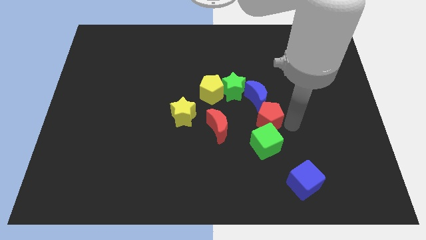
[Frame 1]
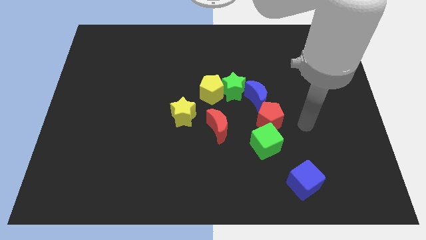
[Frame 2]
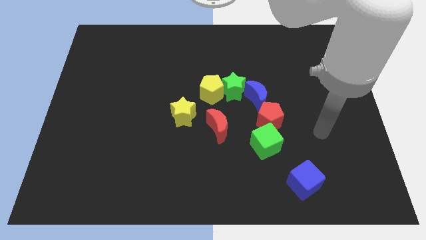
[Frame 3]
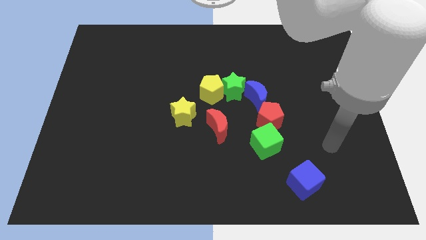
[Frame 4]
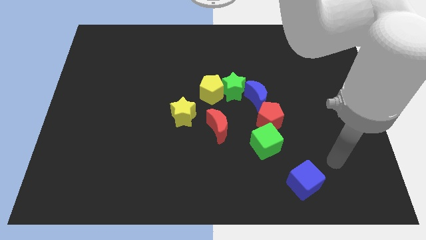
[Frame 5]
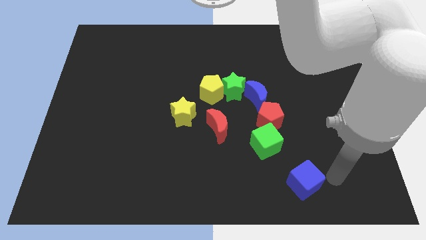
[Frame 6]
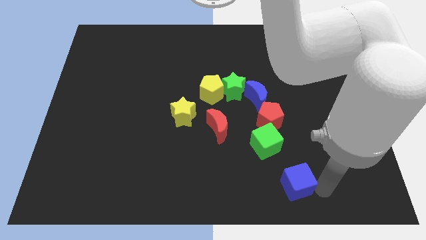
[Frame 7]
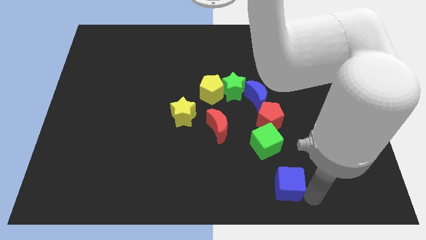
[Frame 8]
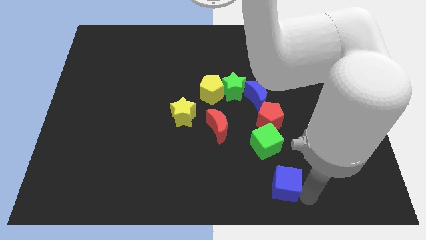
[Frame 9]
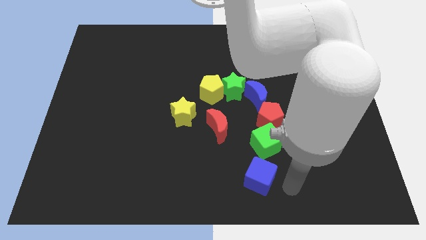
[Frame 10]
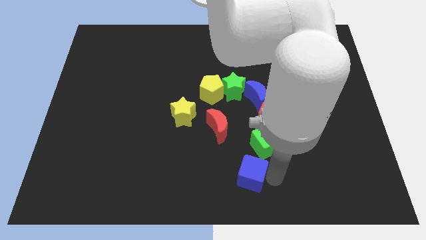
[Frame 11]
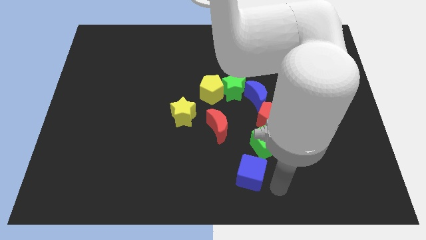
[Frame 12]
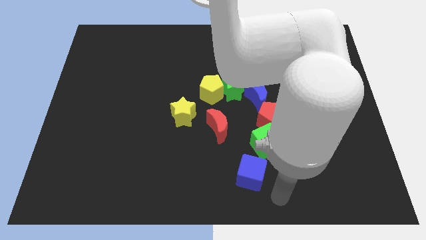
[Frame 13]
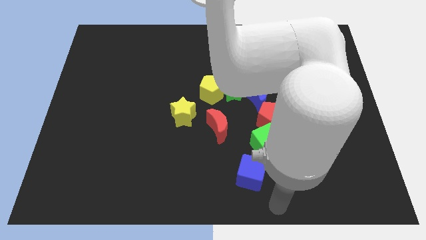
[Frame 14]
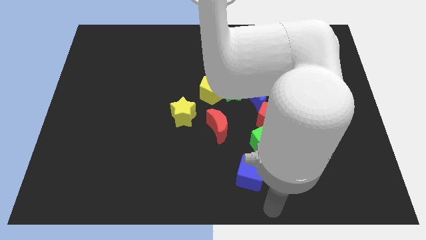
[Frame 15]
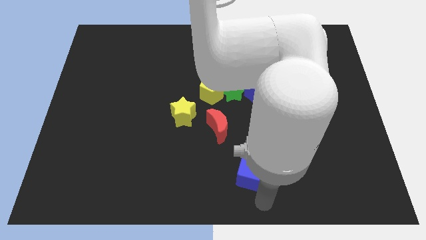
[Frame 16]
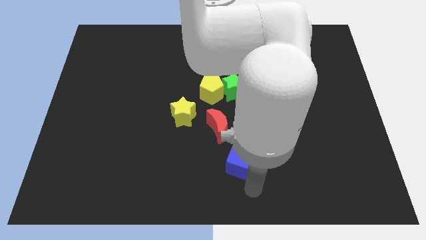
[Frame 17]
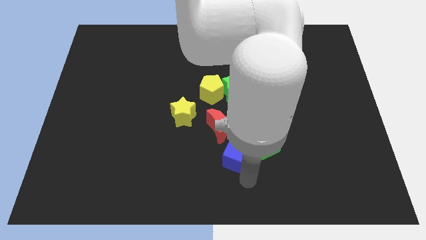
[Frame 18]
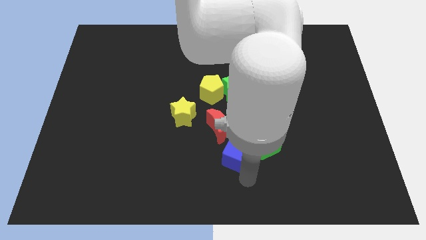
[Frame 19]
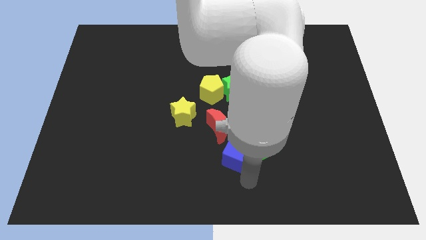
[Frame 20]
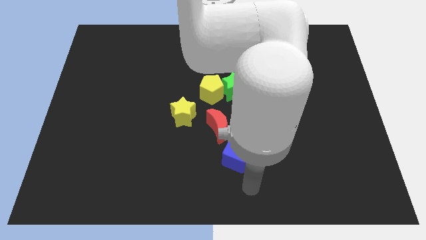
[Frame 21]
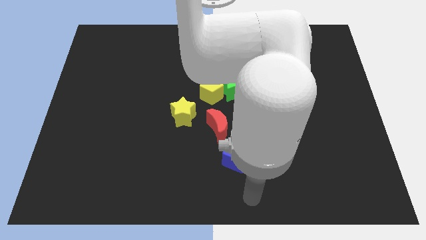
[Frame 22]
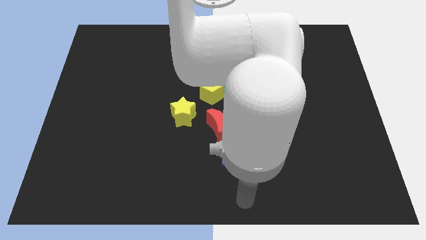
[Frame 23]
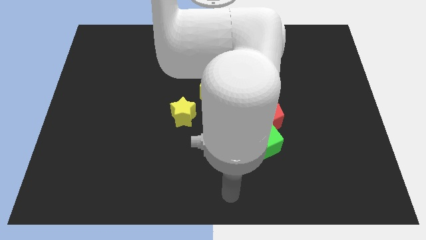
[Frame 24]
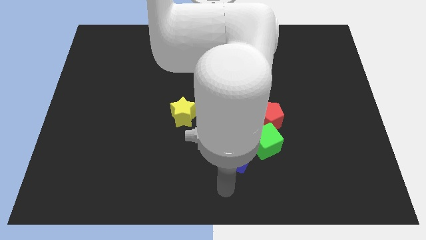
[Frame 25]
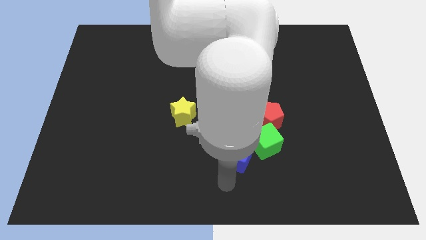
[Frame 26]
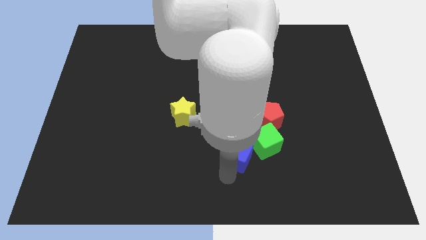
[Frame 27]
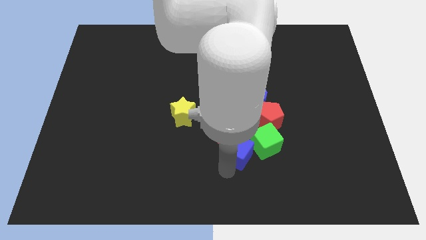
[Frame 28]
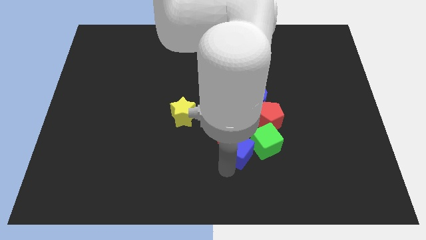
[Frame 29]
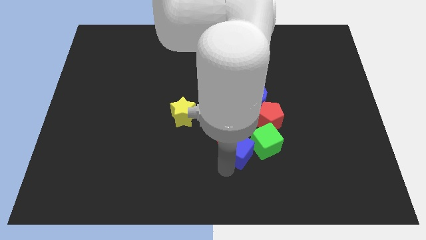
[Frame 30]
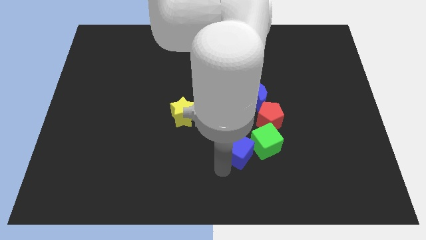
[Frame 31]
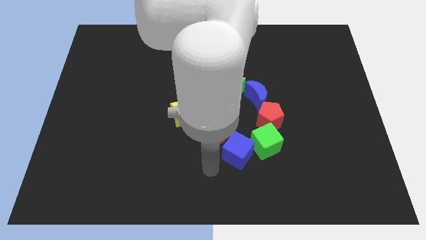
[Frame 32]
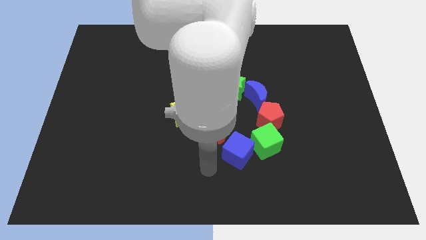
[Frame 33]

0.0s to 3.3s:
move blue cube left to the green cube

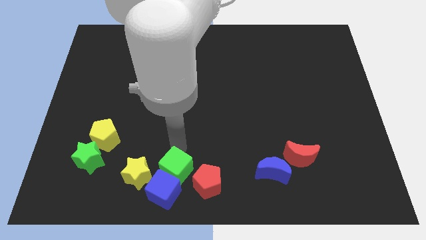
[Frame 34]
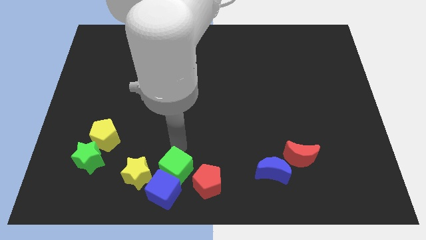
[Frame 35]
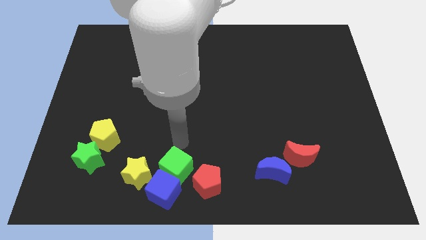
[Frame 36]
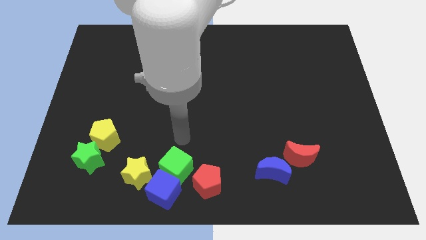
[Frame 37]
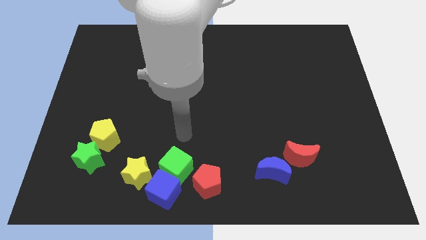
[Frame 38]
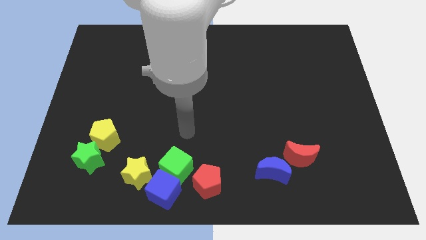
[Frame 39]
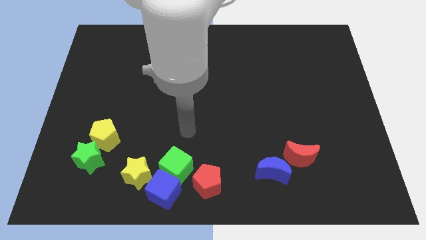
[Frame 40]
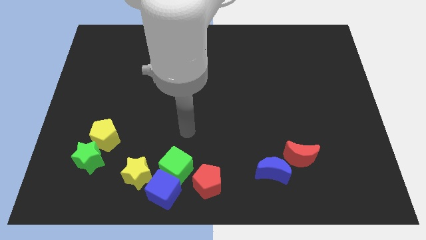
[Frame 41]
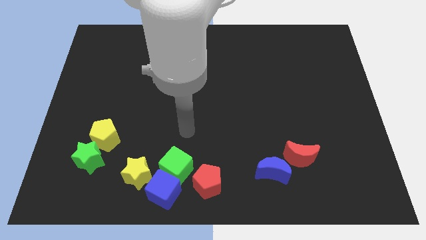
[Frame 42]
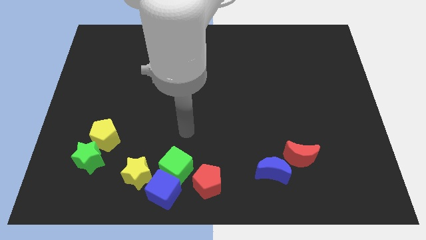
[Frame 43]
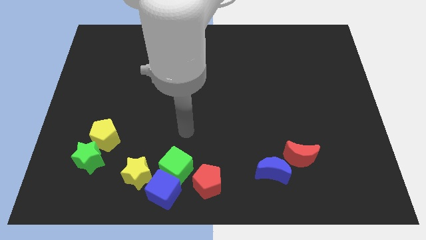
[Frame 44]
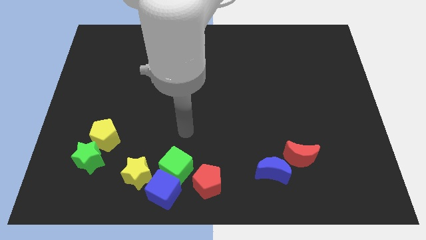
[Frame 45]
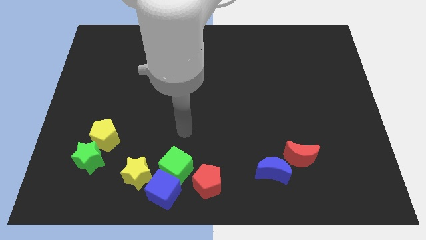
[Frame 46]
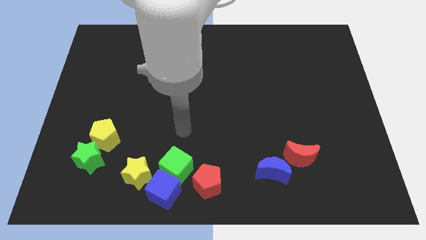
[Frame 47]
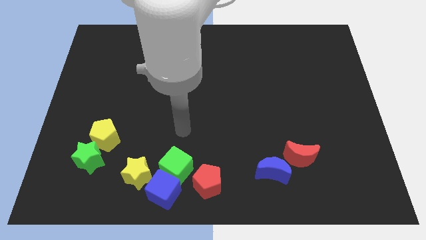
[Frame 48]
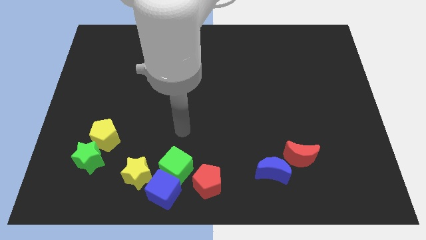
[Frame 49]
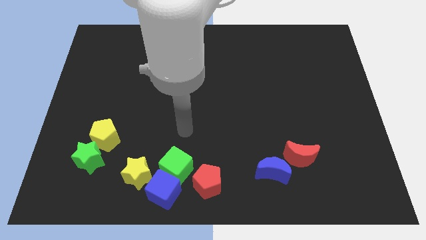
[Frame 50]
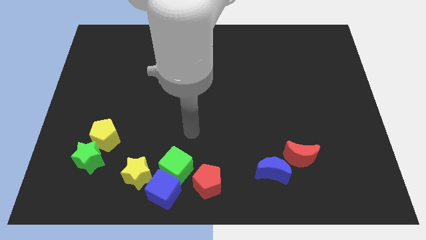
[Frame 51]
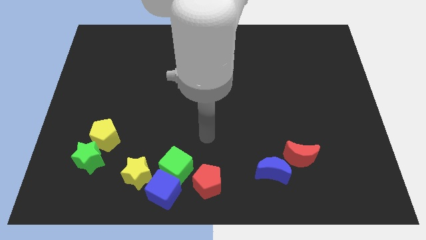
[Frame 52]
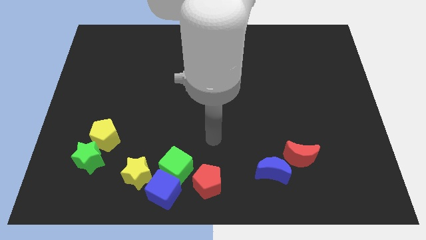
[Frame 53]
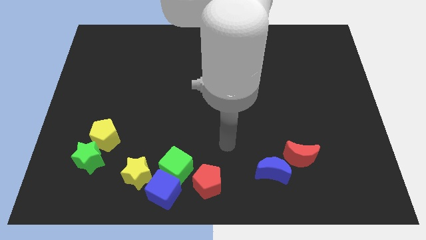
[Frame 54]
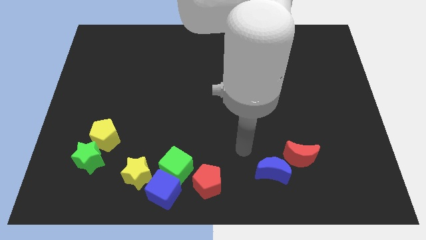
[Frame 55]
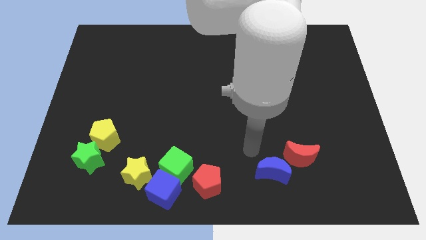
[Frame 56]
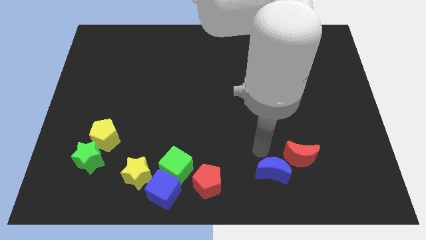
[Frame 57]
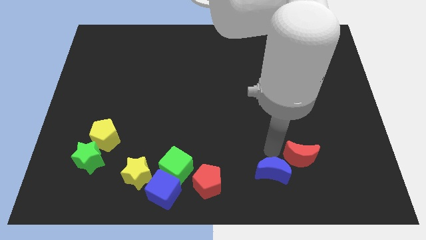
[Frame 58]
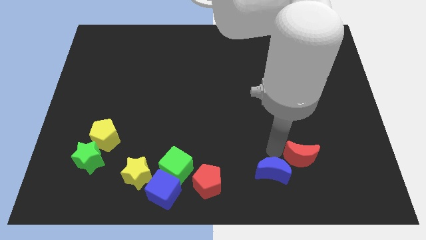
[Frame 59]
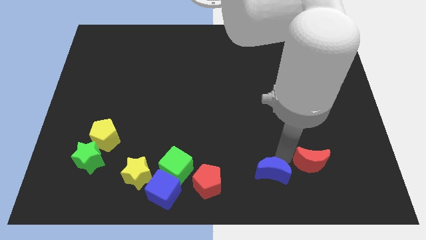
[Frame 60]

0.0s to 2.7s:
move your arm away from the green cube

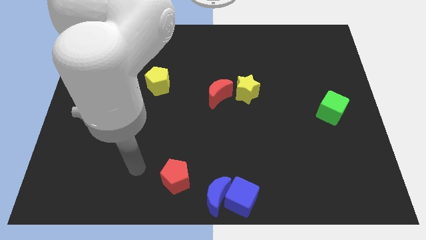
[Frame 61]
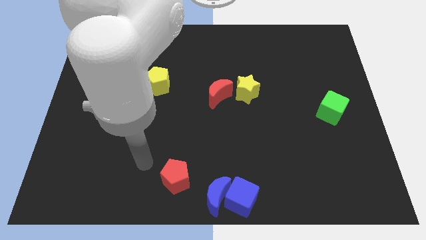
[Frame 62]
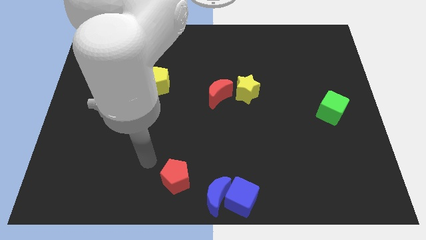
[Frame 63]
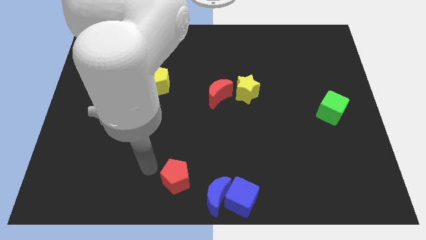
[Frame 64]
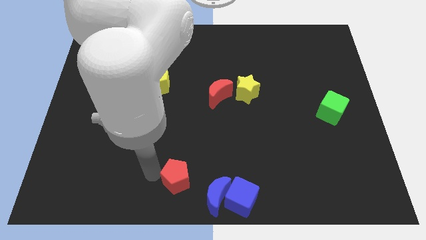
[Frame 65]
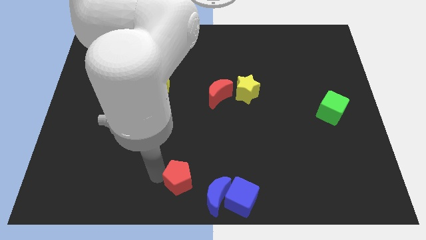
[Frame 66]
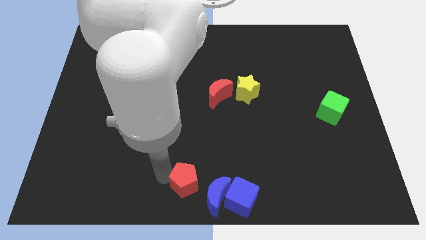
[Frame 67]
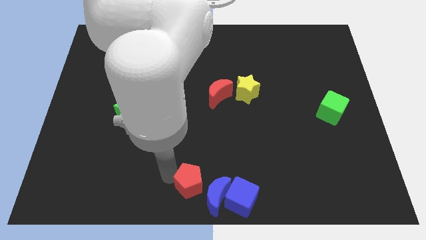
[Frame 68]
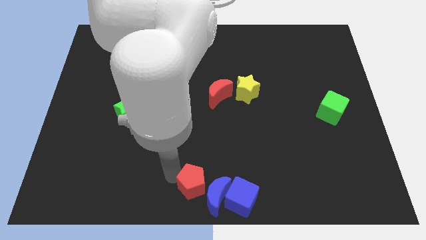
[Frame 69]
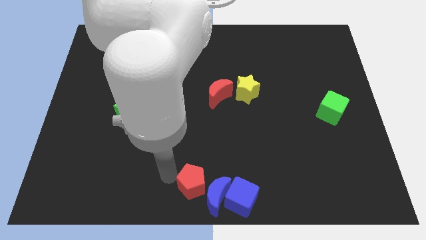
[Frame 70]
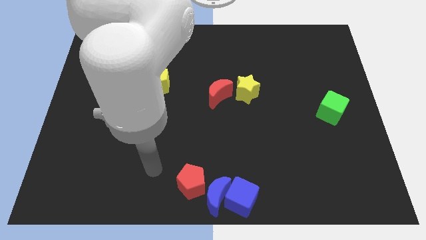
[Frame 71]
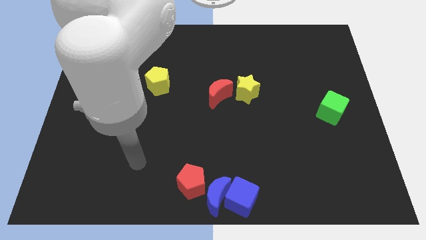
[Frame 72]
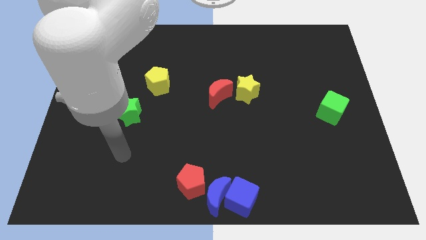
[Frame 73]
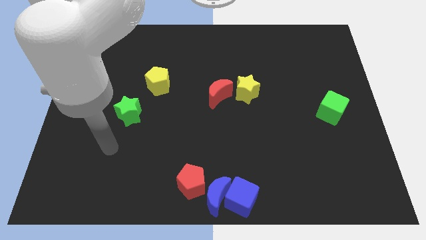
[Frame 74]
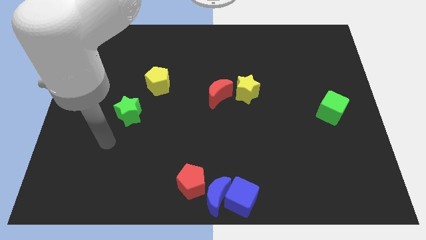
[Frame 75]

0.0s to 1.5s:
slide the red pentagon to the top left of the blue moon

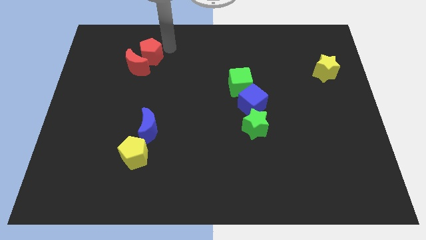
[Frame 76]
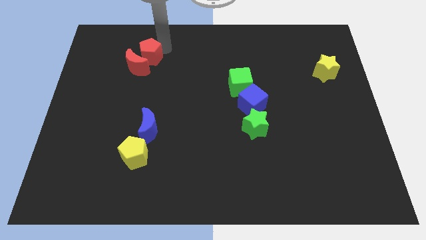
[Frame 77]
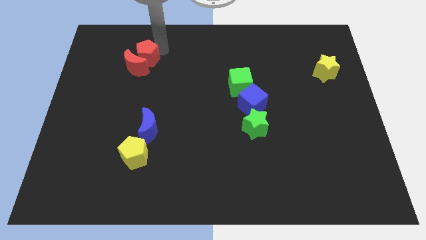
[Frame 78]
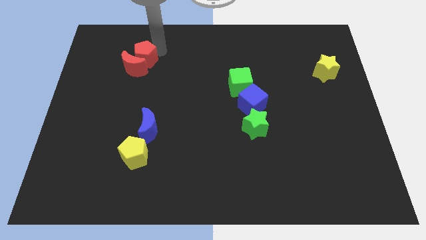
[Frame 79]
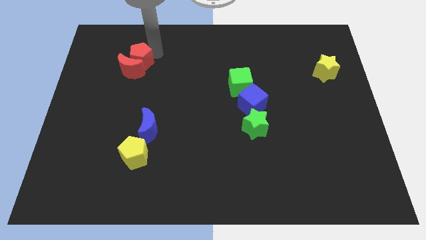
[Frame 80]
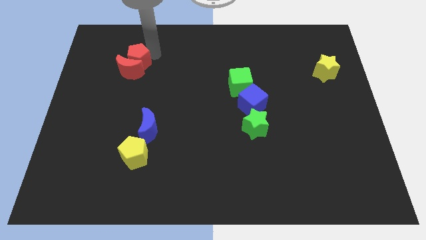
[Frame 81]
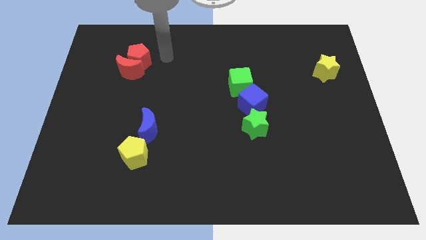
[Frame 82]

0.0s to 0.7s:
move the red blocks slightly down

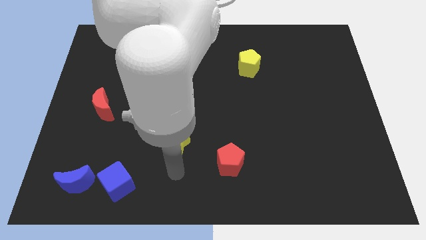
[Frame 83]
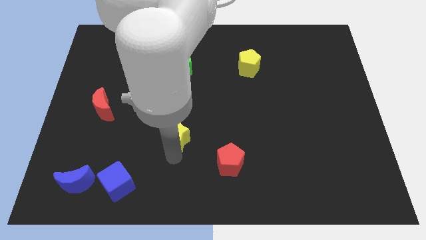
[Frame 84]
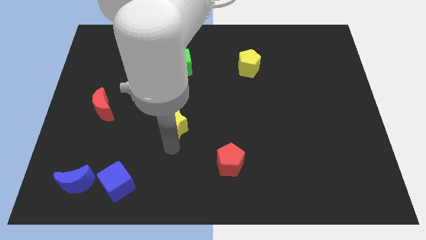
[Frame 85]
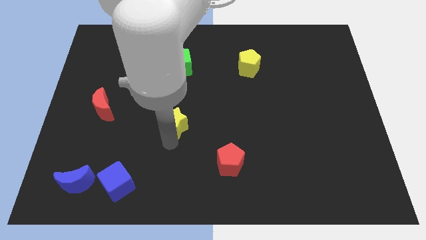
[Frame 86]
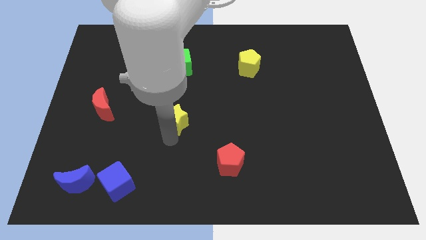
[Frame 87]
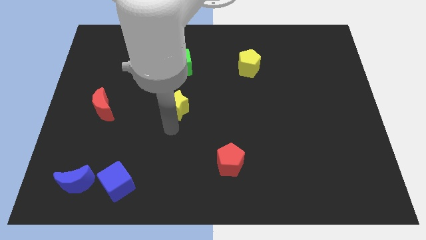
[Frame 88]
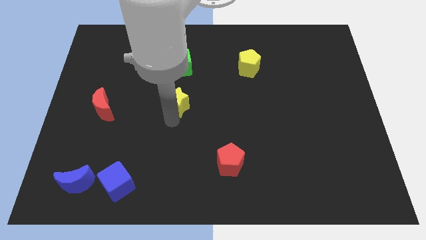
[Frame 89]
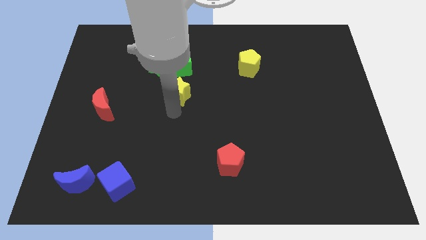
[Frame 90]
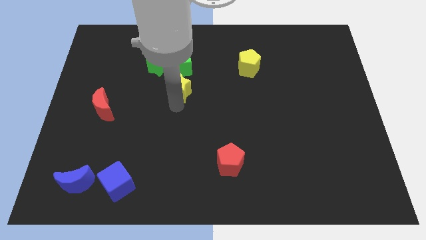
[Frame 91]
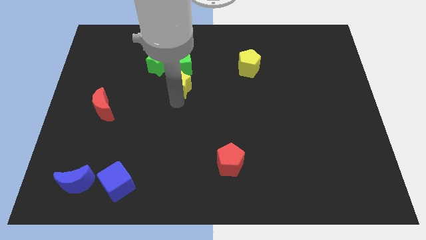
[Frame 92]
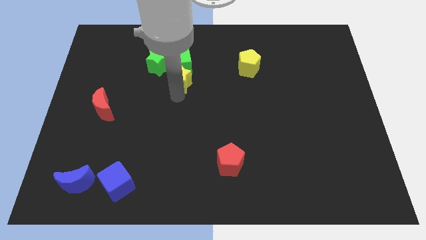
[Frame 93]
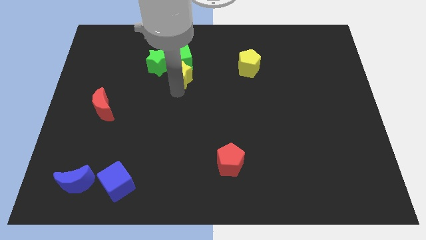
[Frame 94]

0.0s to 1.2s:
move the yellow star to the bottom side of the green cube
